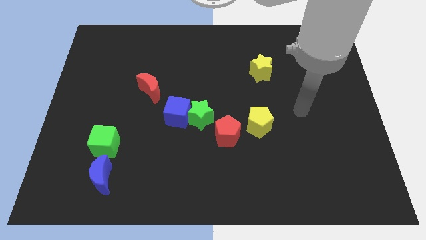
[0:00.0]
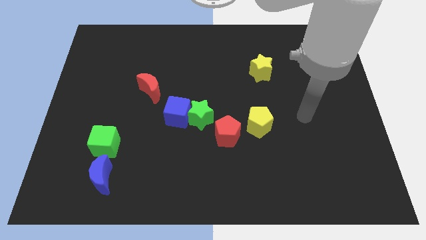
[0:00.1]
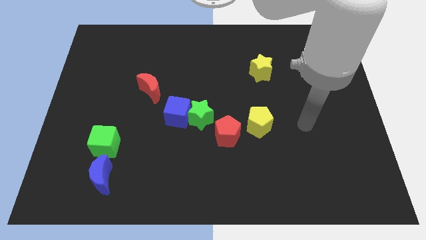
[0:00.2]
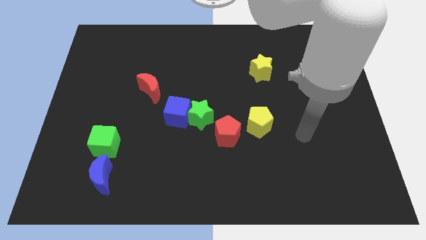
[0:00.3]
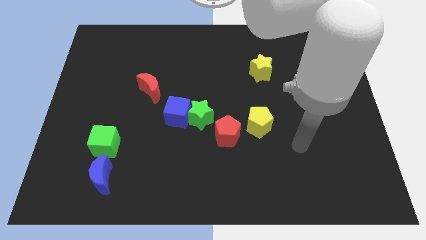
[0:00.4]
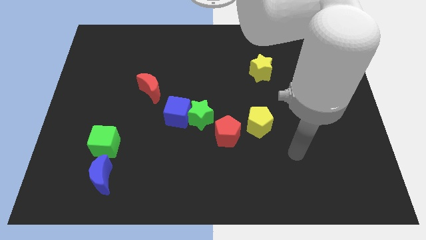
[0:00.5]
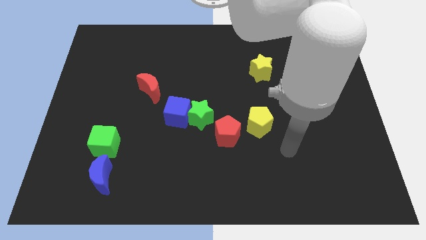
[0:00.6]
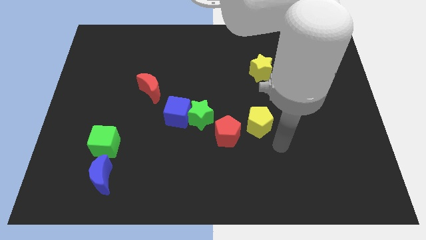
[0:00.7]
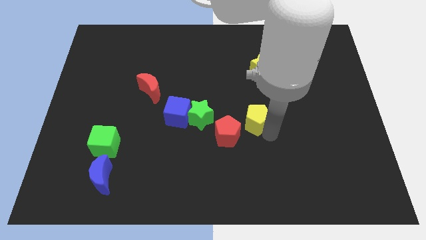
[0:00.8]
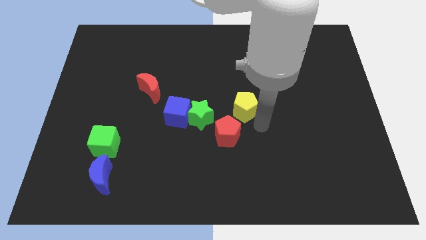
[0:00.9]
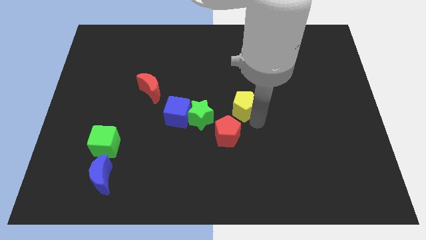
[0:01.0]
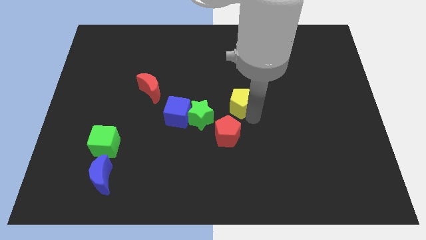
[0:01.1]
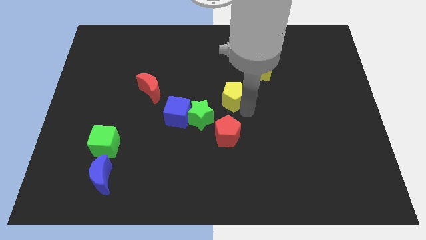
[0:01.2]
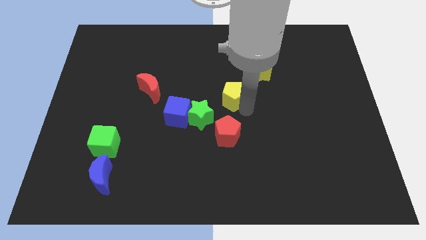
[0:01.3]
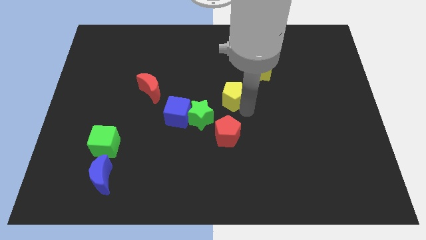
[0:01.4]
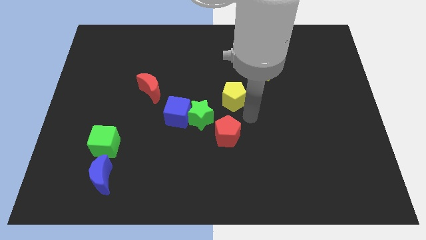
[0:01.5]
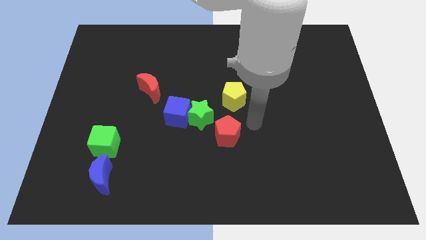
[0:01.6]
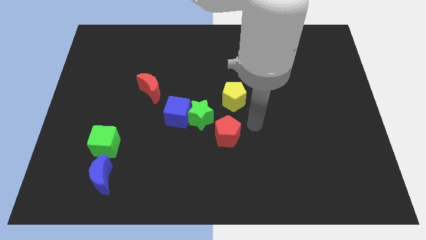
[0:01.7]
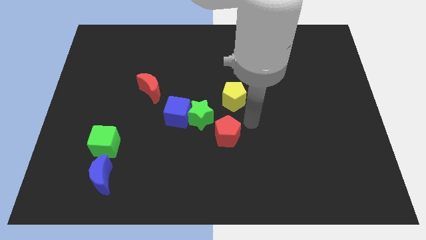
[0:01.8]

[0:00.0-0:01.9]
place the yellow pentagon above the red pentagon

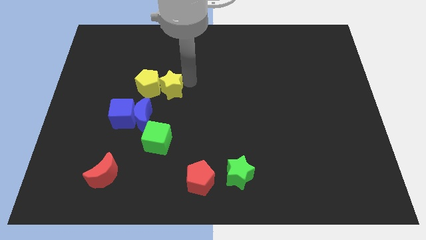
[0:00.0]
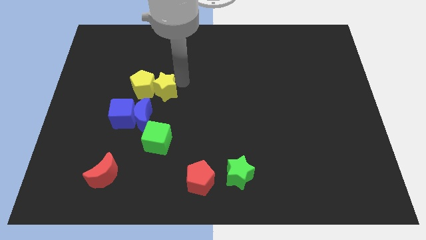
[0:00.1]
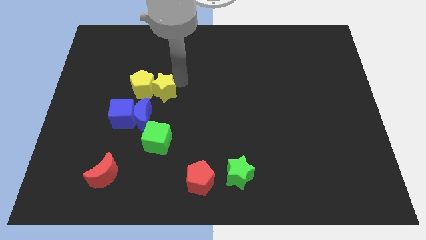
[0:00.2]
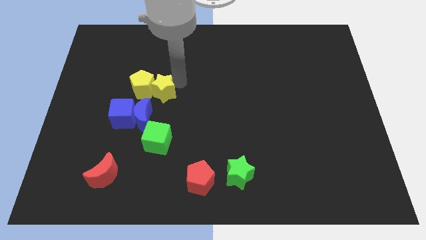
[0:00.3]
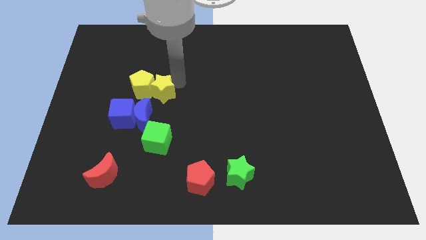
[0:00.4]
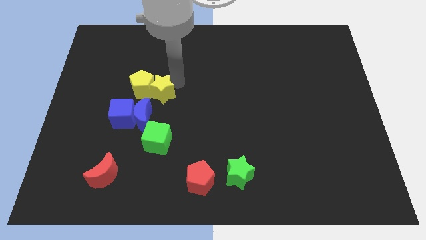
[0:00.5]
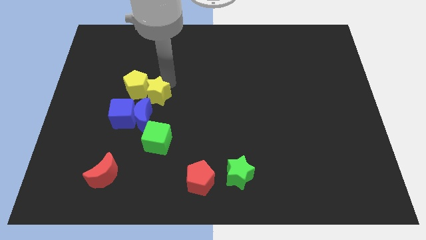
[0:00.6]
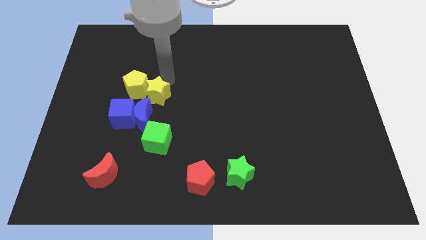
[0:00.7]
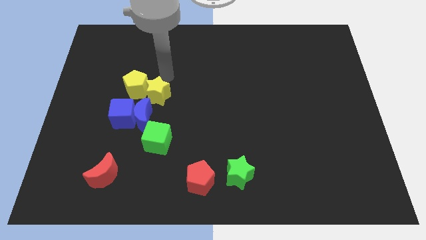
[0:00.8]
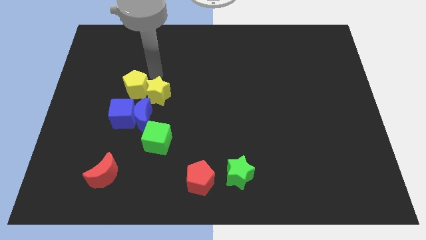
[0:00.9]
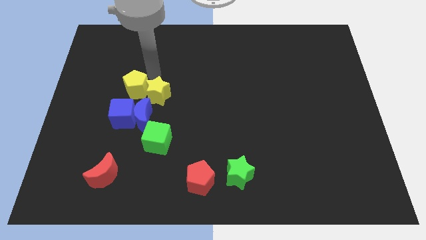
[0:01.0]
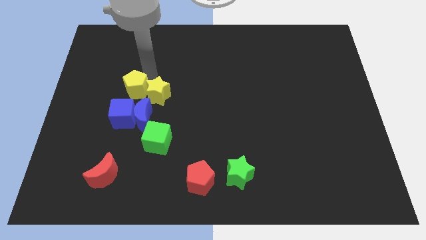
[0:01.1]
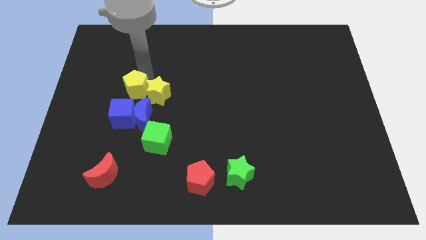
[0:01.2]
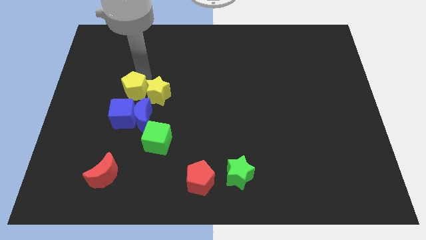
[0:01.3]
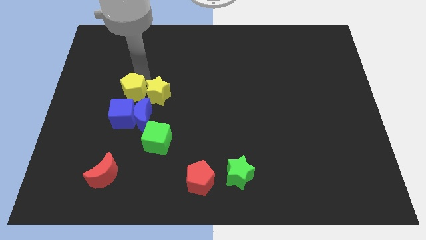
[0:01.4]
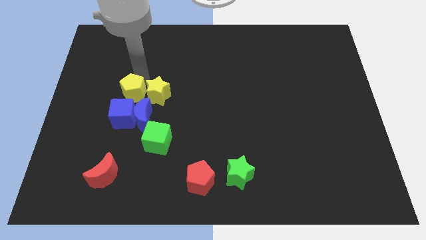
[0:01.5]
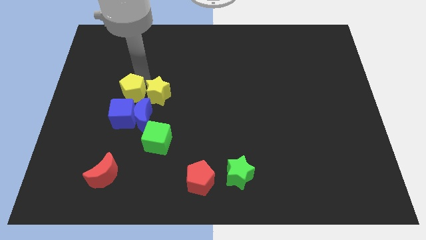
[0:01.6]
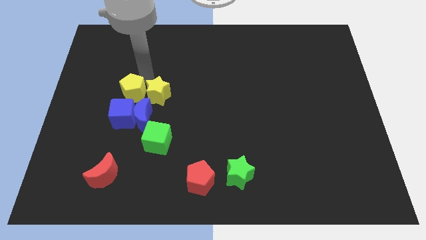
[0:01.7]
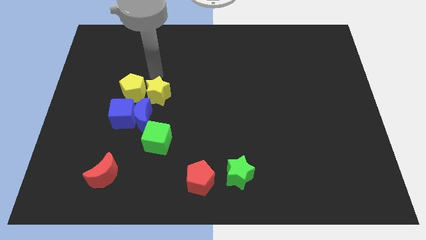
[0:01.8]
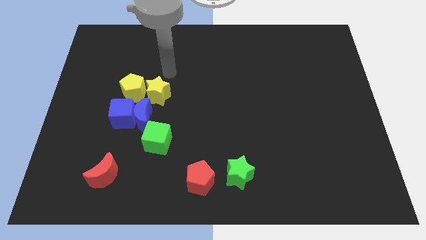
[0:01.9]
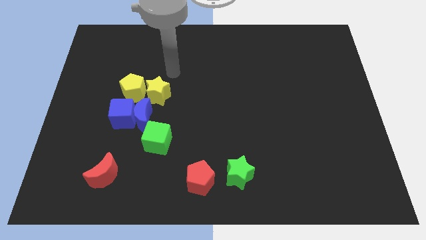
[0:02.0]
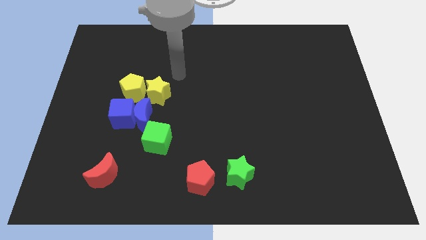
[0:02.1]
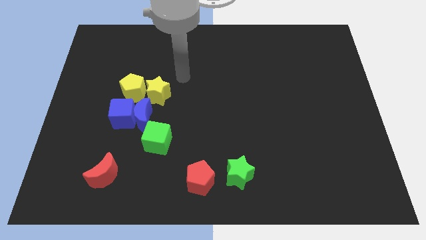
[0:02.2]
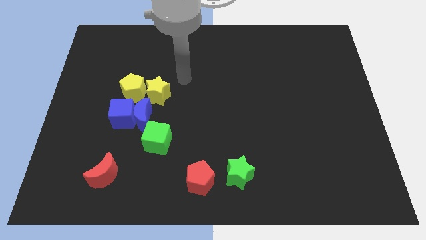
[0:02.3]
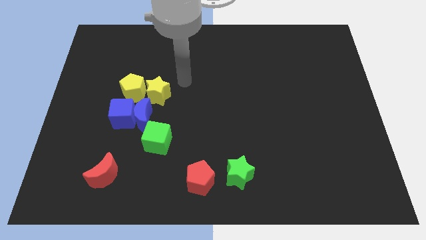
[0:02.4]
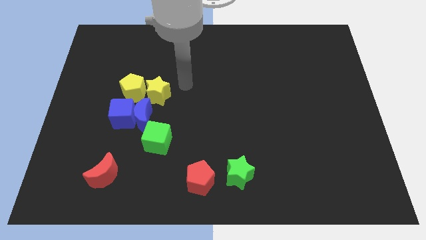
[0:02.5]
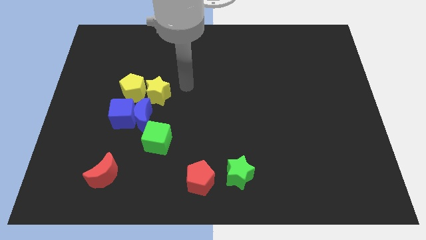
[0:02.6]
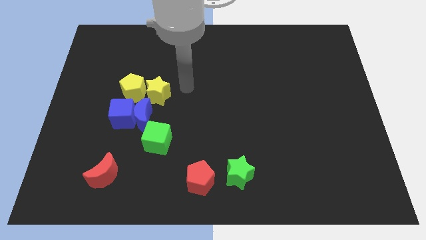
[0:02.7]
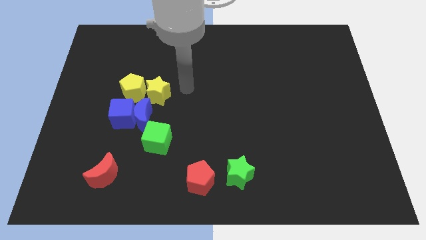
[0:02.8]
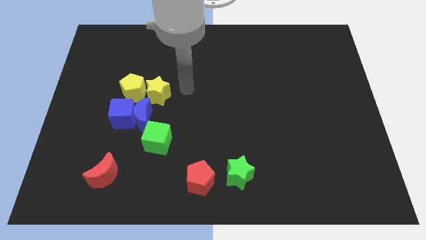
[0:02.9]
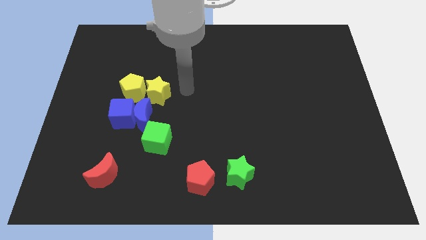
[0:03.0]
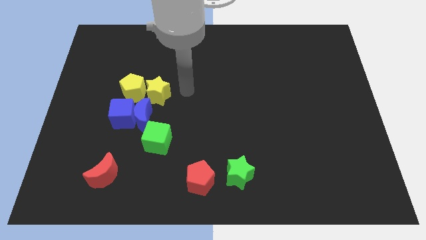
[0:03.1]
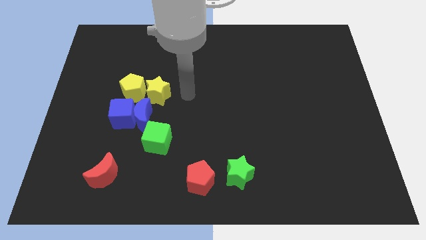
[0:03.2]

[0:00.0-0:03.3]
push the yellow star slightly toward the left side

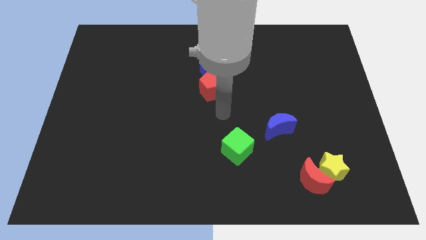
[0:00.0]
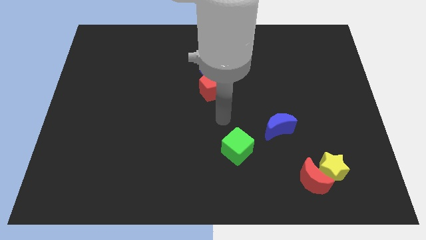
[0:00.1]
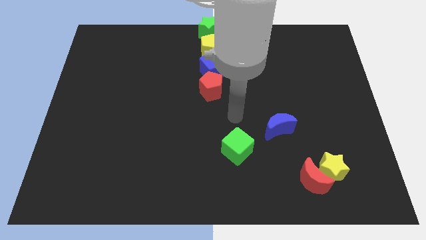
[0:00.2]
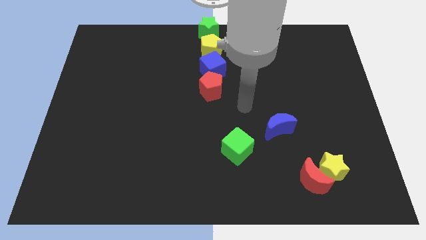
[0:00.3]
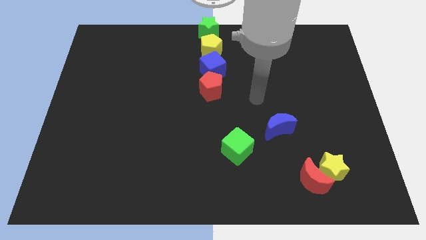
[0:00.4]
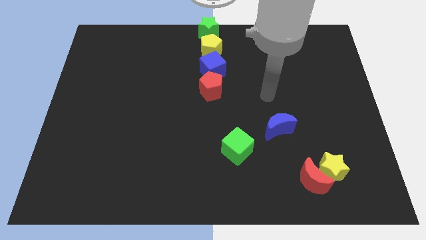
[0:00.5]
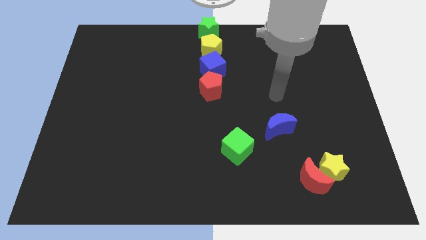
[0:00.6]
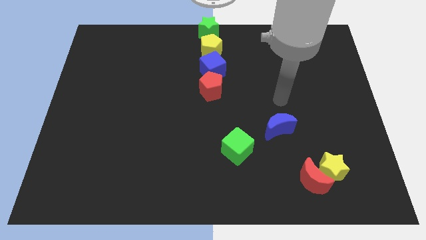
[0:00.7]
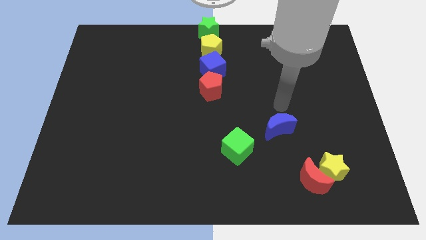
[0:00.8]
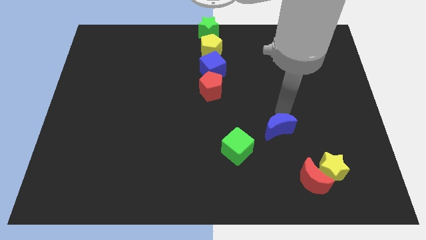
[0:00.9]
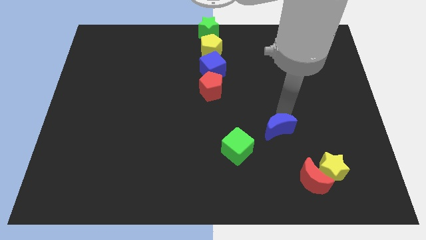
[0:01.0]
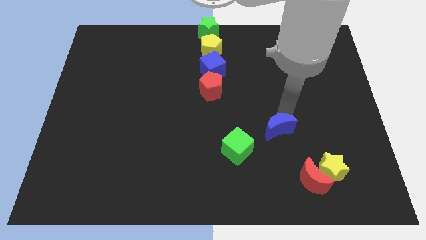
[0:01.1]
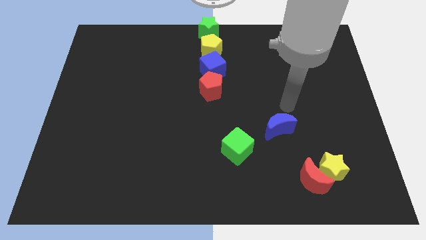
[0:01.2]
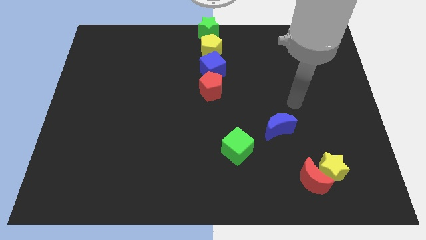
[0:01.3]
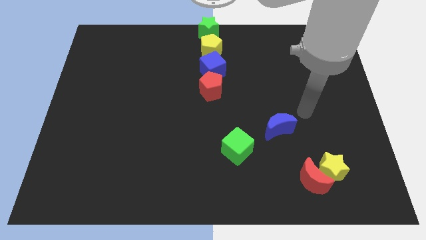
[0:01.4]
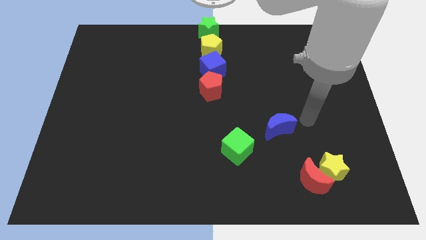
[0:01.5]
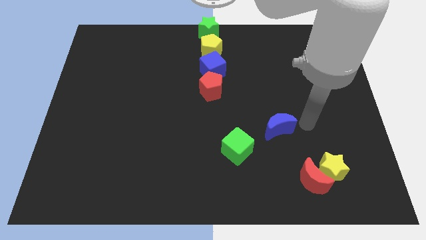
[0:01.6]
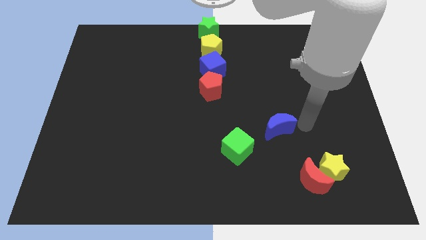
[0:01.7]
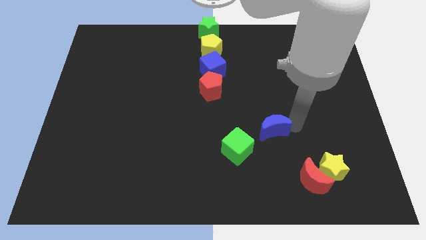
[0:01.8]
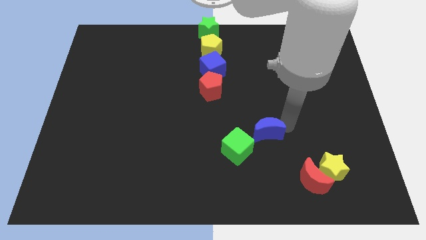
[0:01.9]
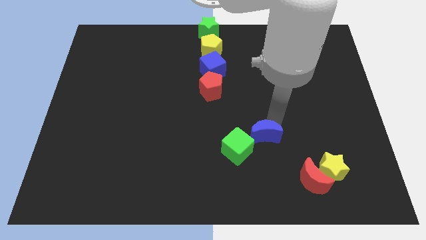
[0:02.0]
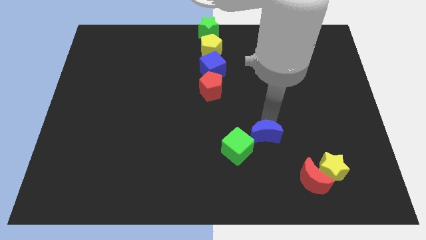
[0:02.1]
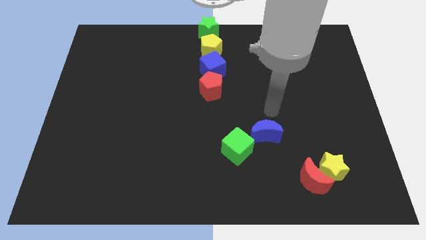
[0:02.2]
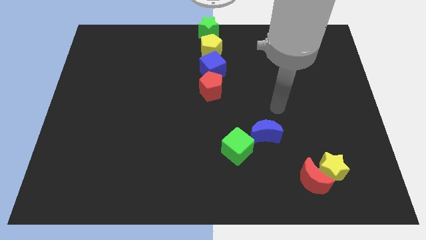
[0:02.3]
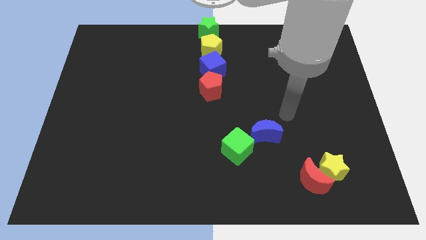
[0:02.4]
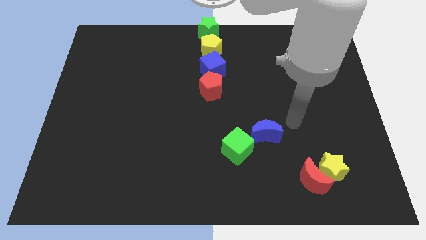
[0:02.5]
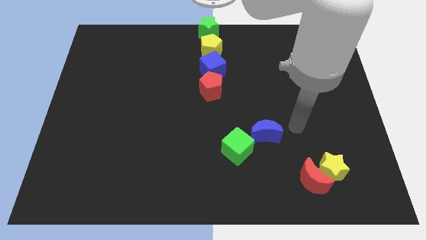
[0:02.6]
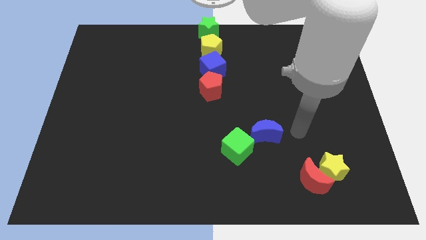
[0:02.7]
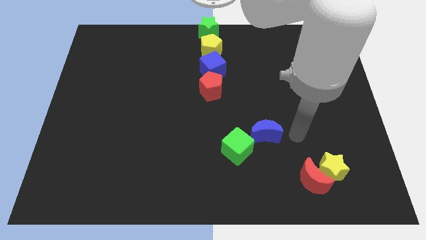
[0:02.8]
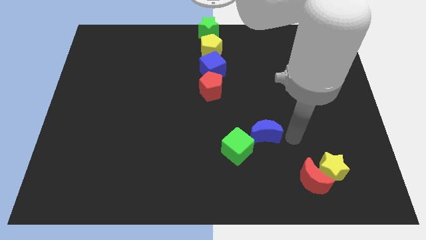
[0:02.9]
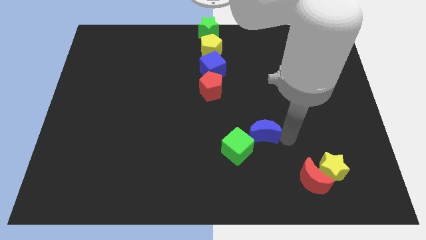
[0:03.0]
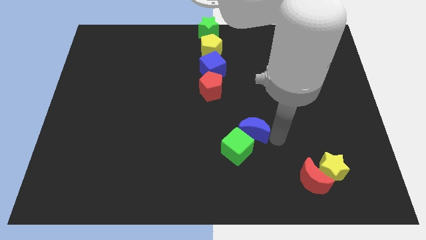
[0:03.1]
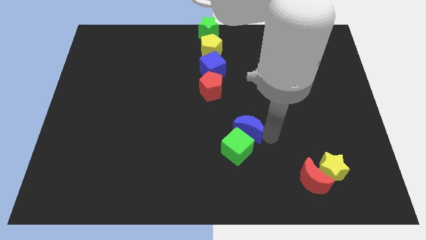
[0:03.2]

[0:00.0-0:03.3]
push the blue crescent to the top left of the red crescent

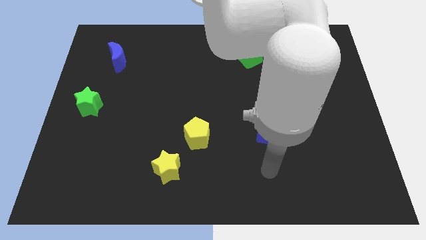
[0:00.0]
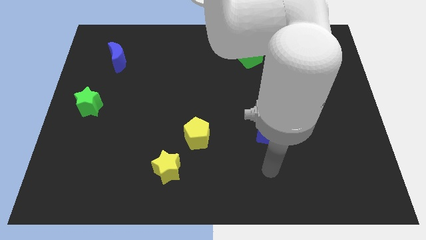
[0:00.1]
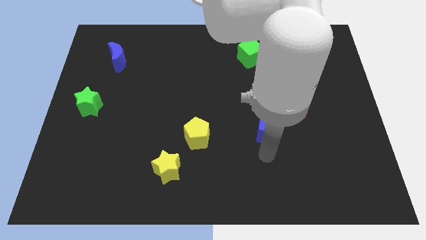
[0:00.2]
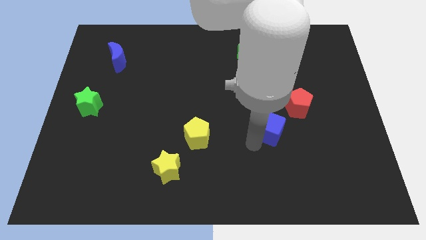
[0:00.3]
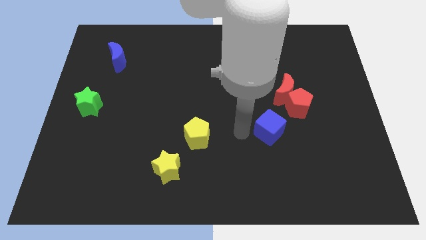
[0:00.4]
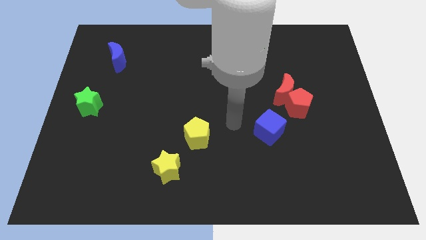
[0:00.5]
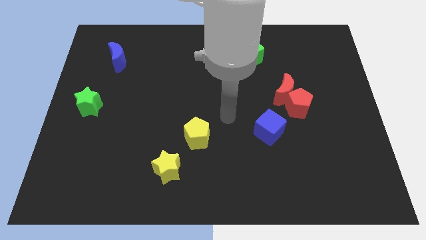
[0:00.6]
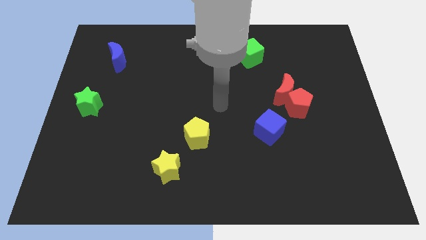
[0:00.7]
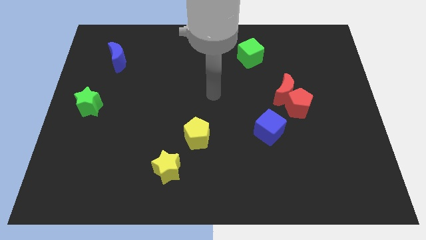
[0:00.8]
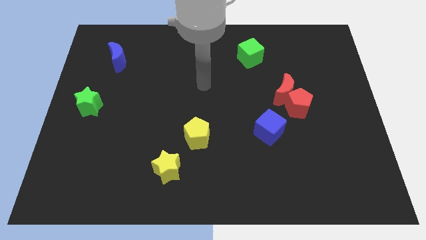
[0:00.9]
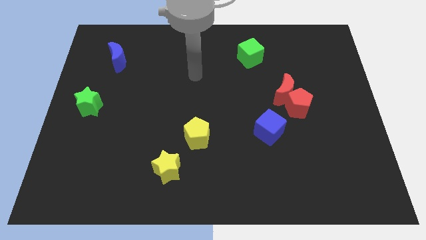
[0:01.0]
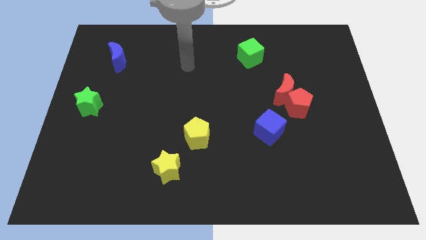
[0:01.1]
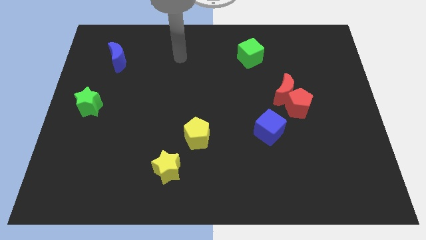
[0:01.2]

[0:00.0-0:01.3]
point the arm to the right of the blue moon
